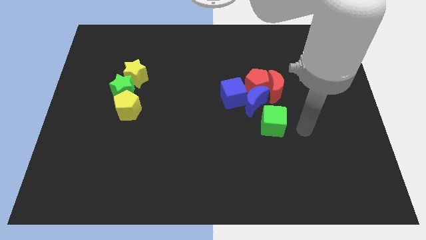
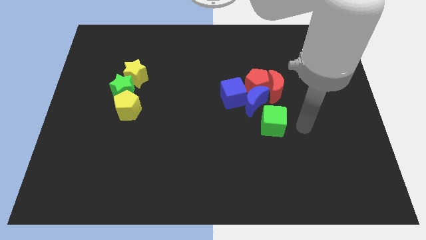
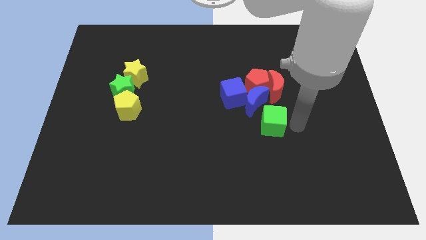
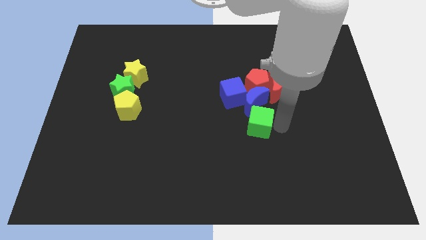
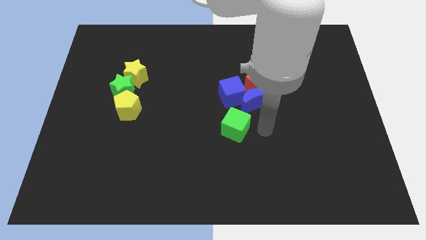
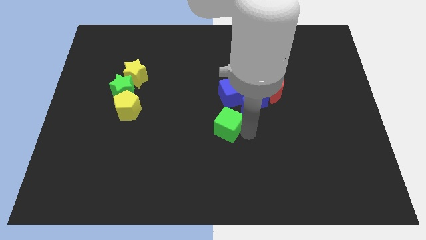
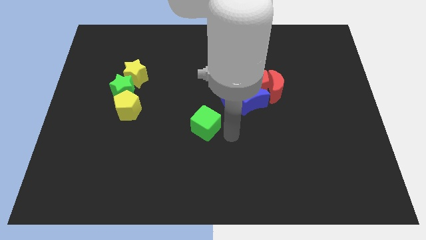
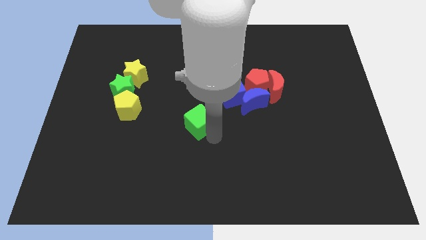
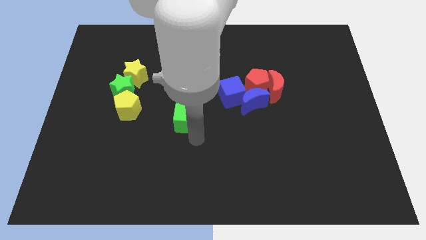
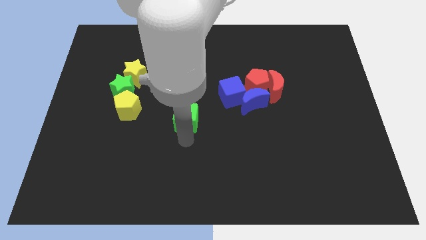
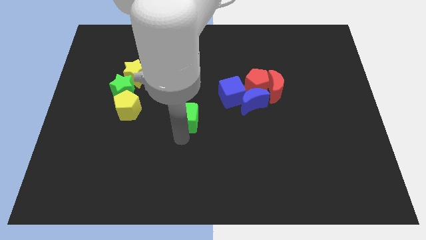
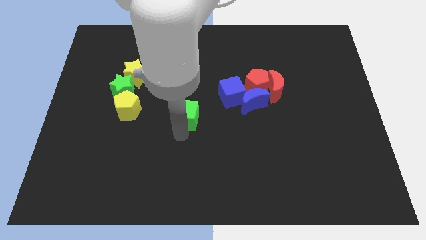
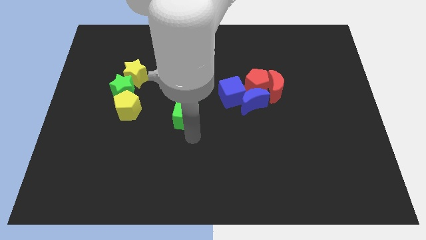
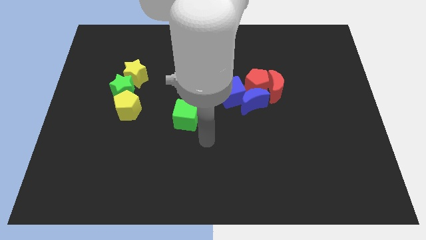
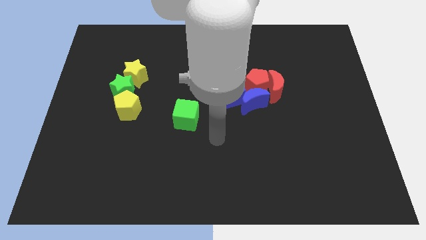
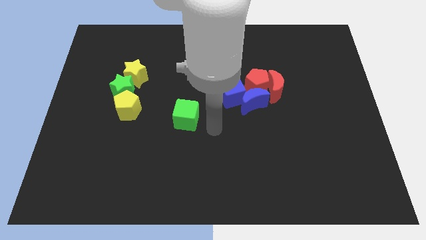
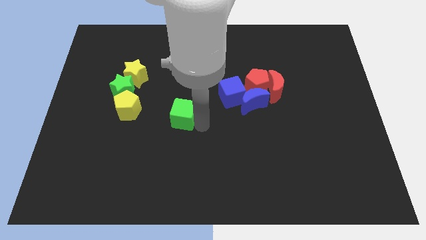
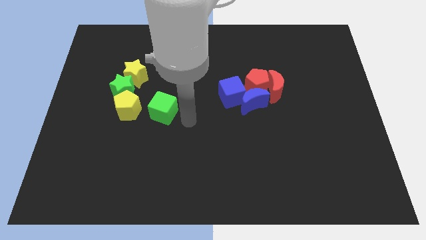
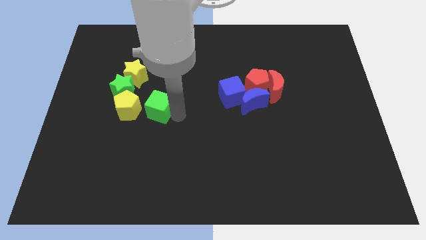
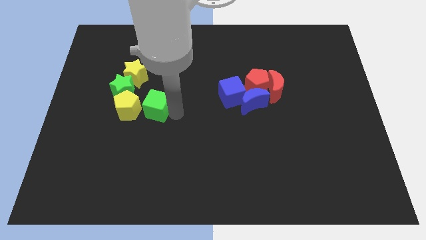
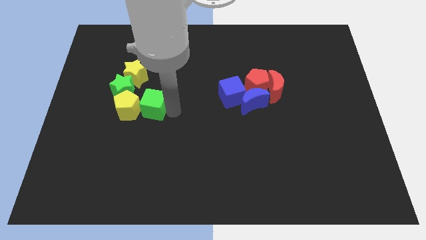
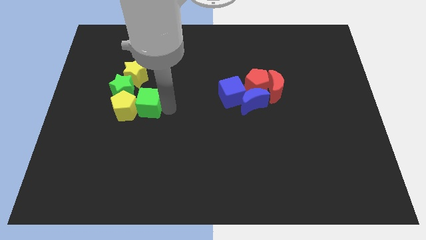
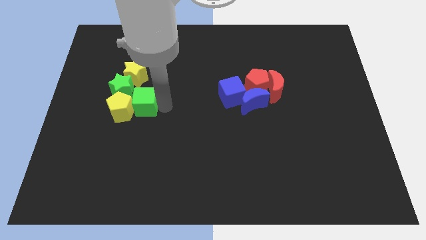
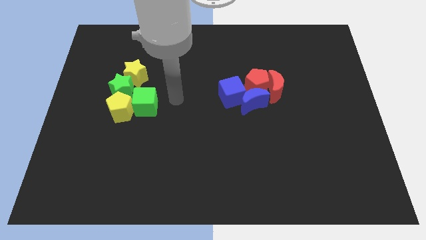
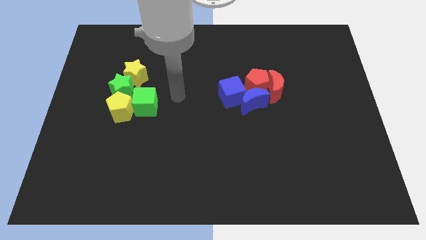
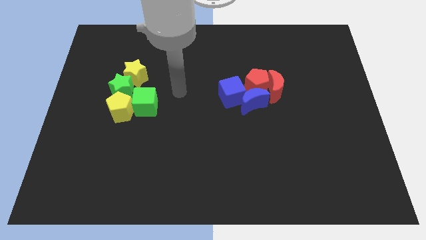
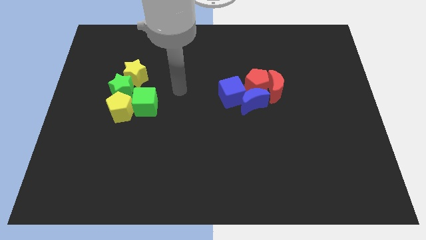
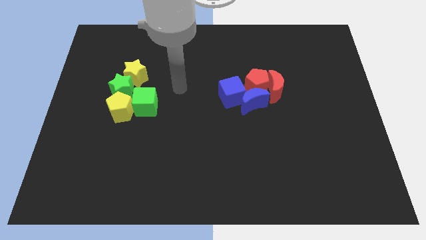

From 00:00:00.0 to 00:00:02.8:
move the green cube to the top right of the yellow pentagon

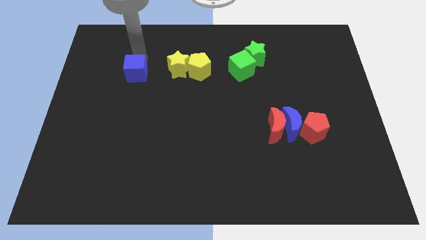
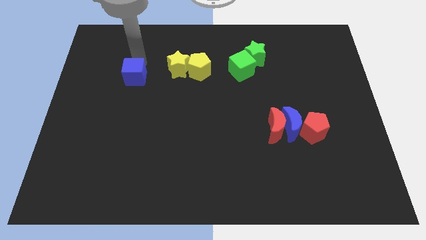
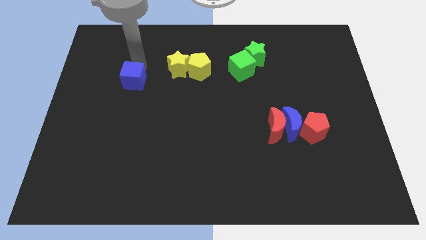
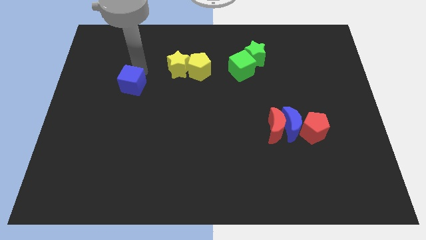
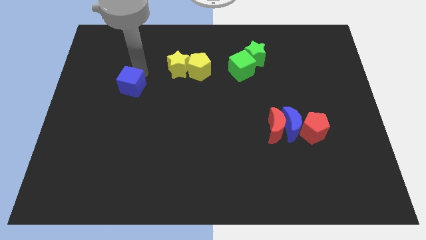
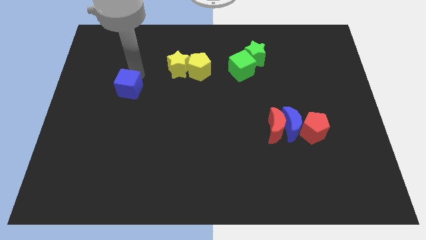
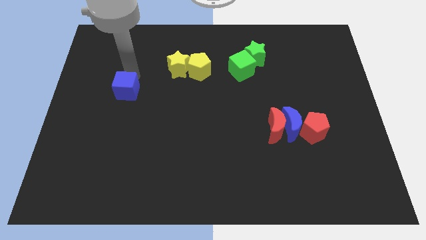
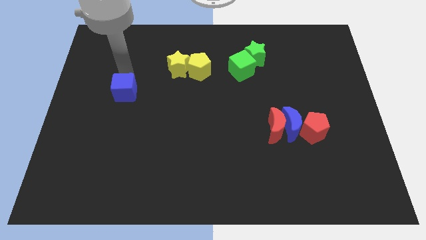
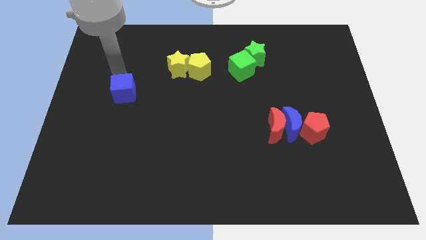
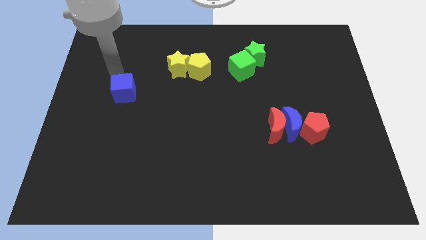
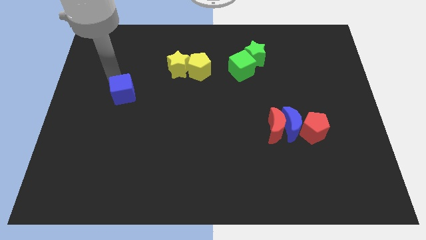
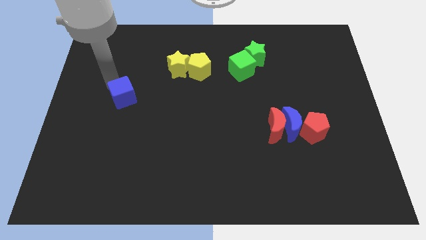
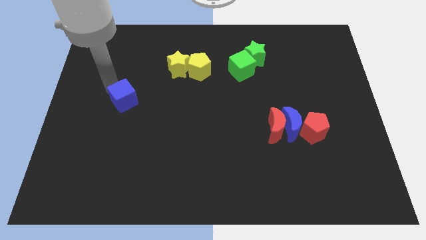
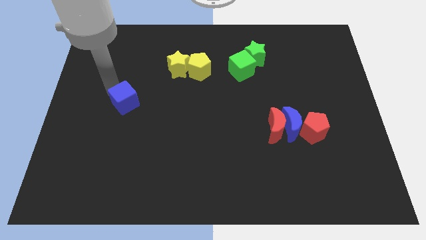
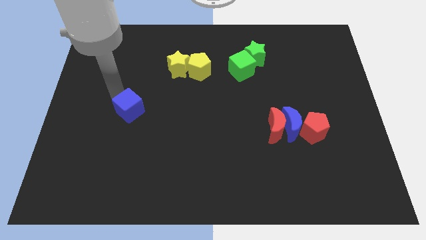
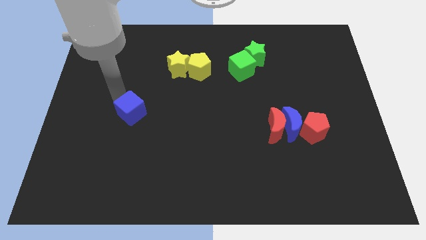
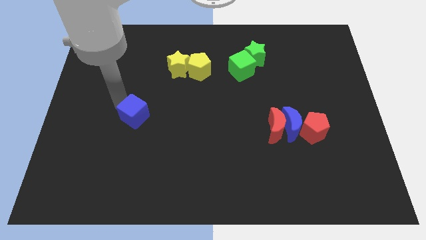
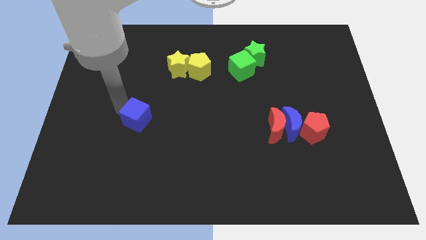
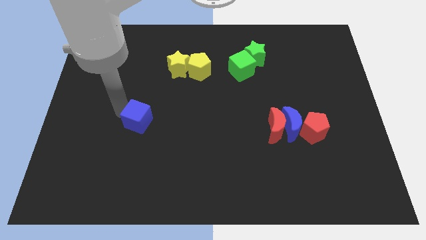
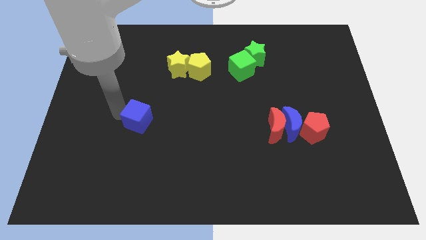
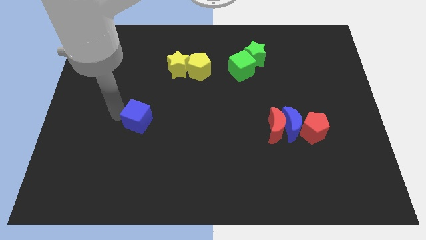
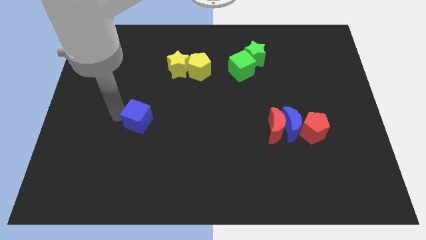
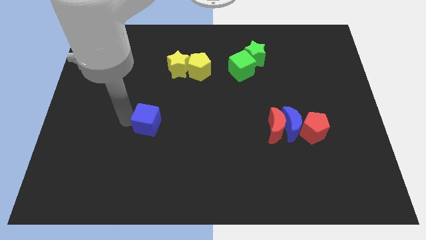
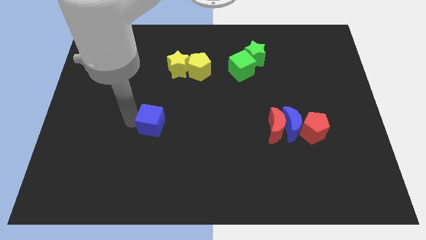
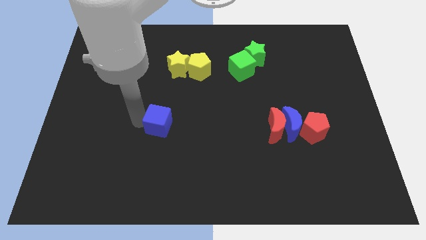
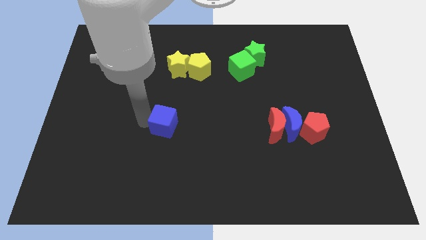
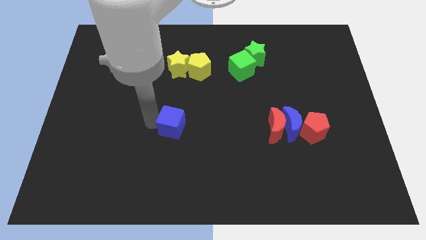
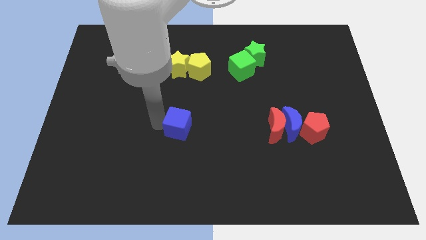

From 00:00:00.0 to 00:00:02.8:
push the blue cube diagonally to the left bottom of the green cube

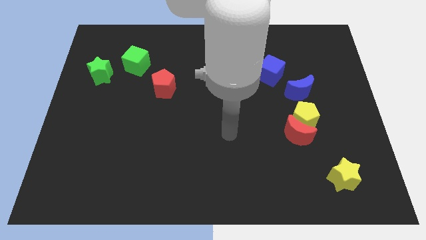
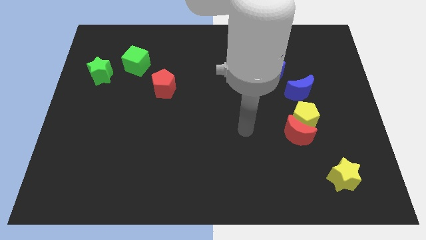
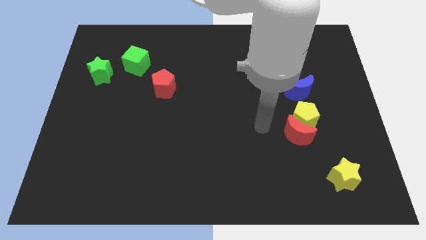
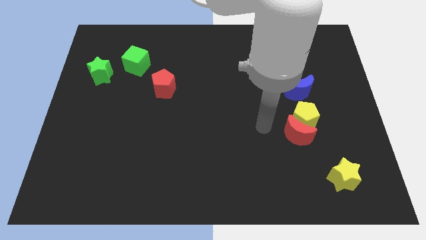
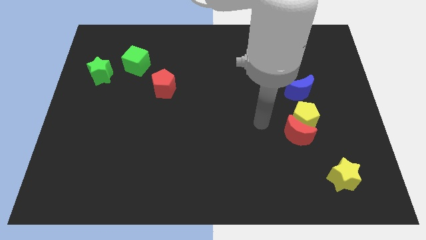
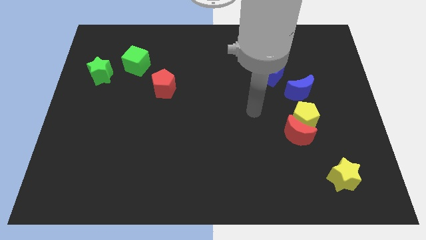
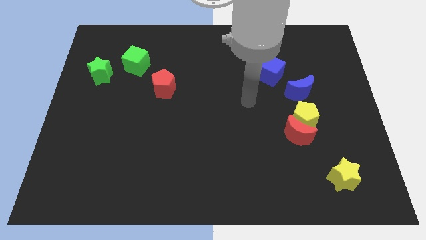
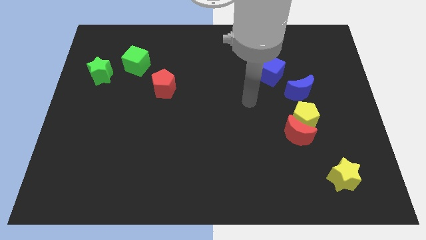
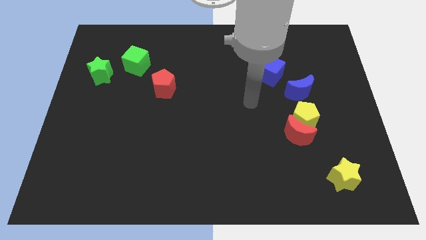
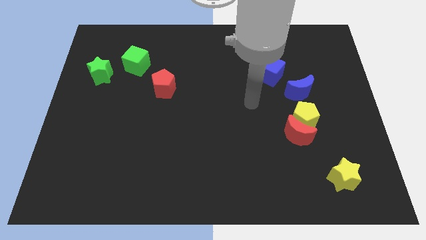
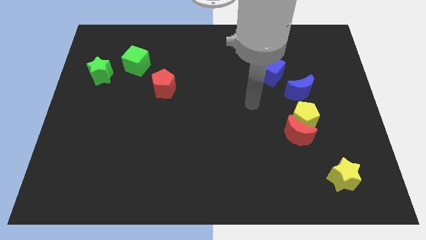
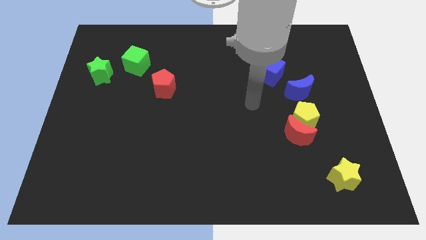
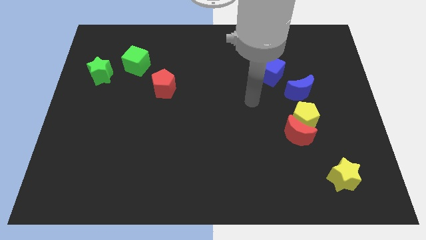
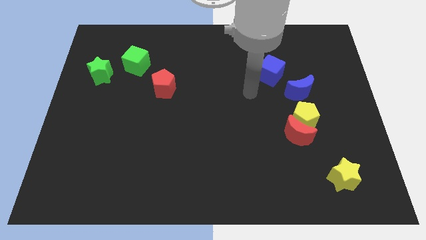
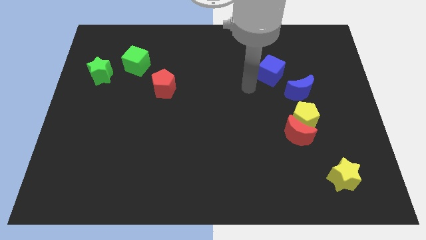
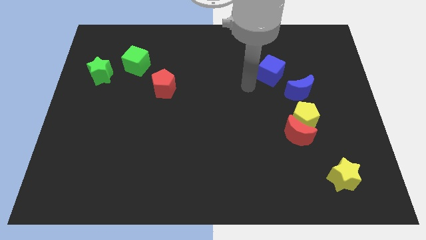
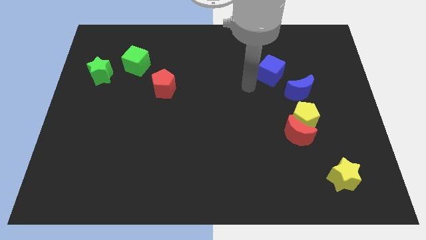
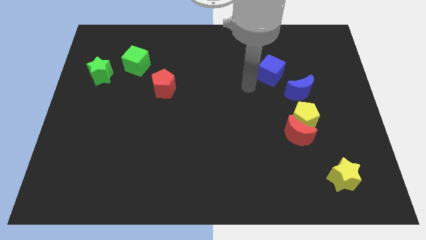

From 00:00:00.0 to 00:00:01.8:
move your arm towards the blue cube

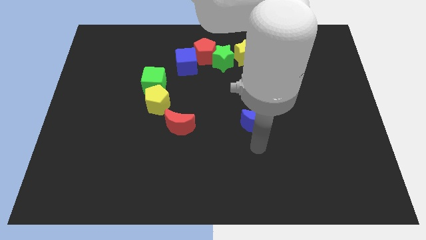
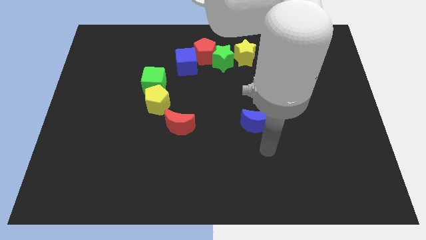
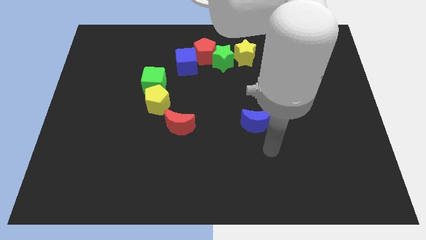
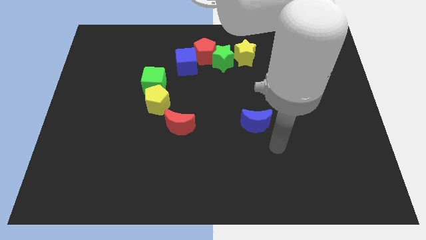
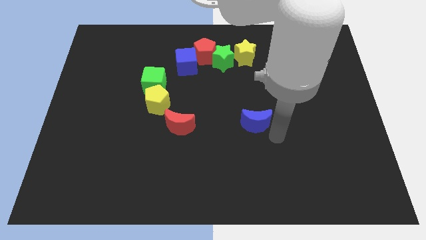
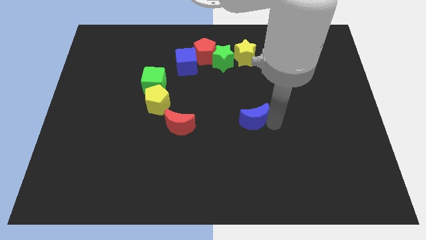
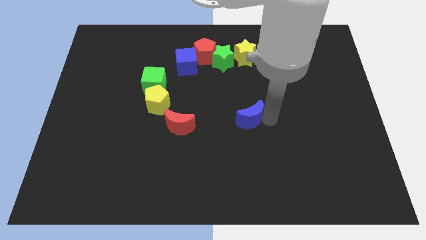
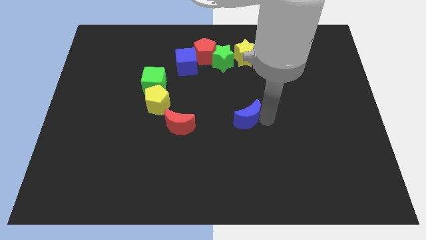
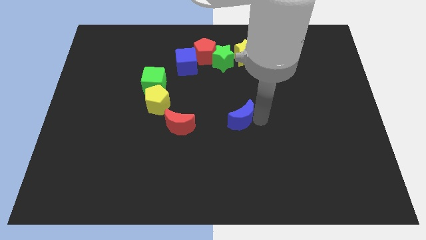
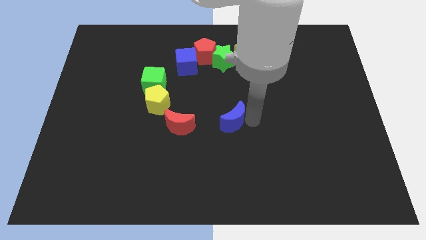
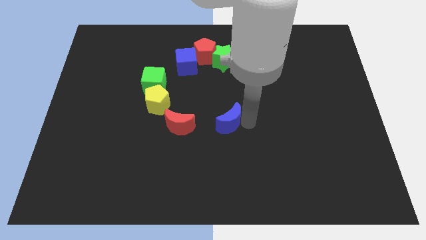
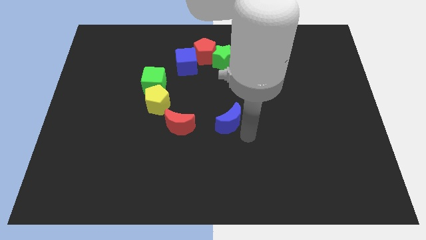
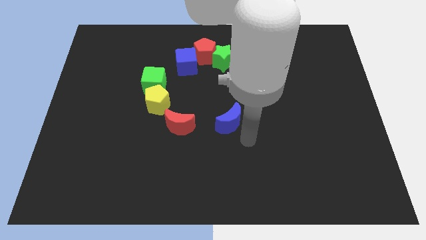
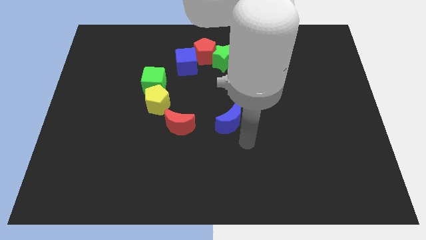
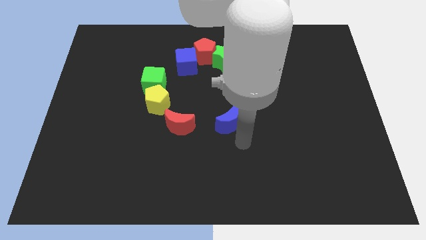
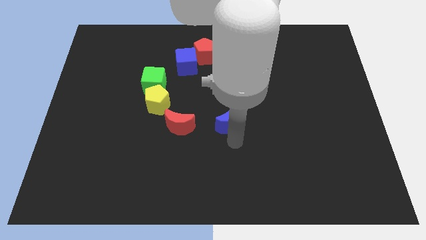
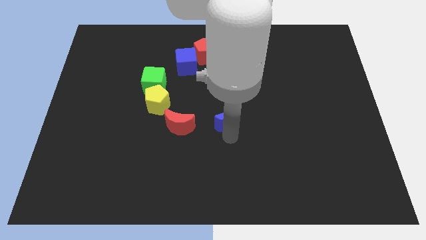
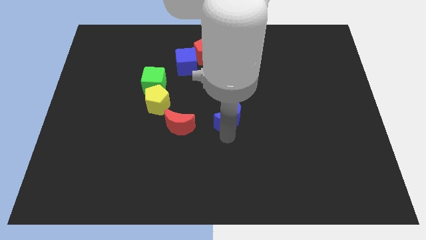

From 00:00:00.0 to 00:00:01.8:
move the blue moon towards the right of the red moon
